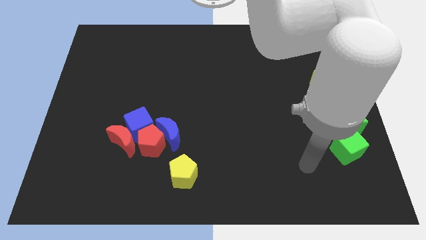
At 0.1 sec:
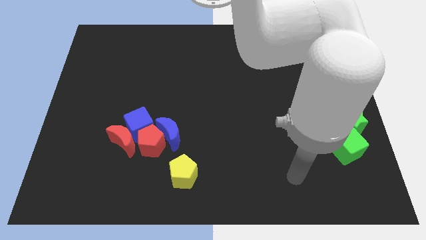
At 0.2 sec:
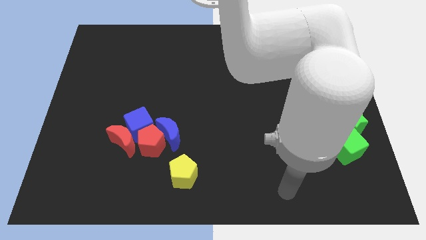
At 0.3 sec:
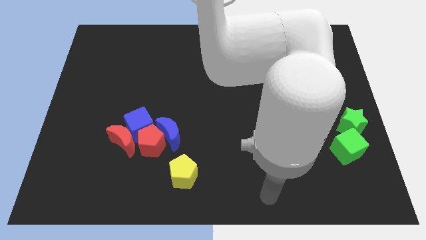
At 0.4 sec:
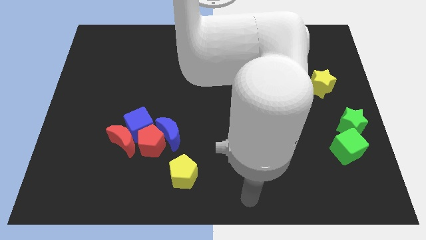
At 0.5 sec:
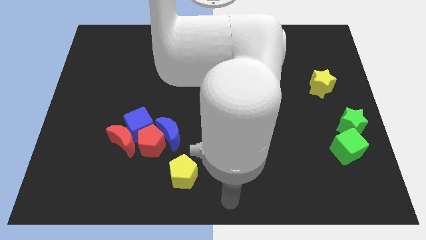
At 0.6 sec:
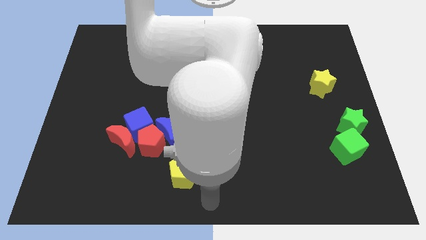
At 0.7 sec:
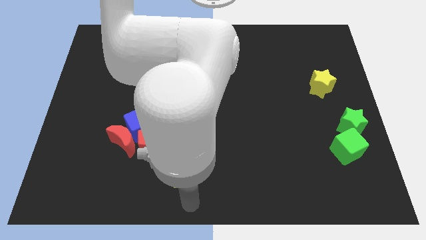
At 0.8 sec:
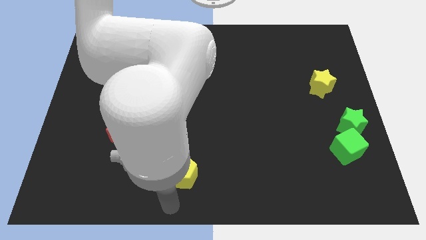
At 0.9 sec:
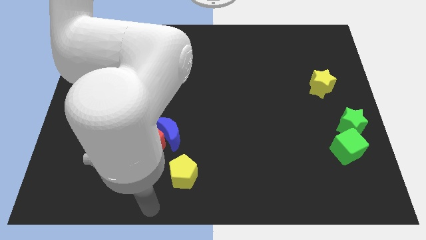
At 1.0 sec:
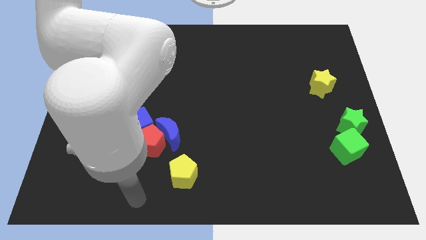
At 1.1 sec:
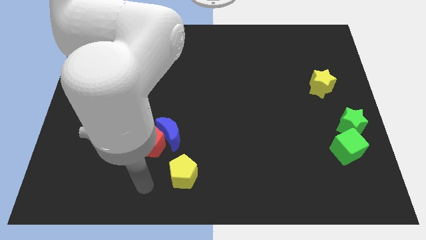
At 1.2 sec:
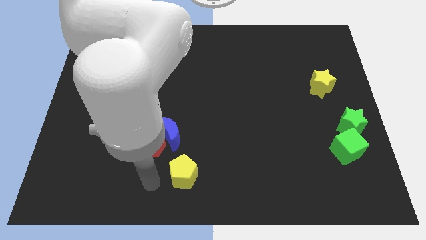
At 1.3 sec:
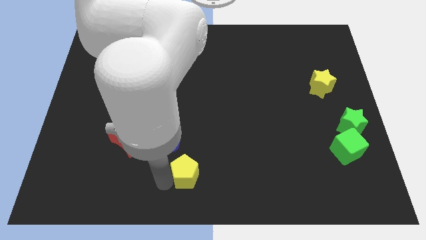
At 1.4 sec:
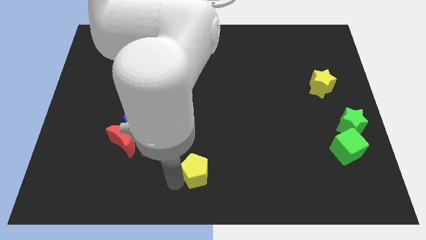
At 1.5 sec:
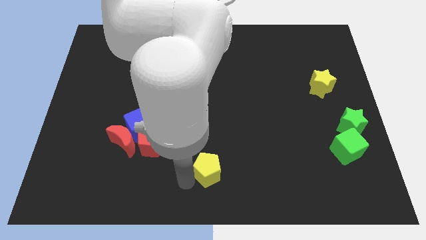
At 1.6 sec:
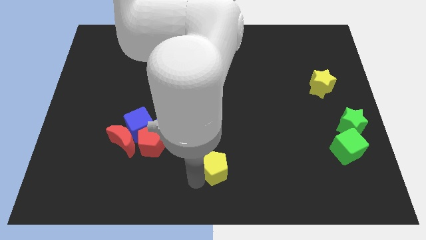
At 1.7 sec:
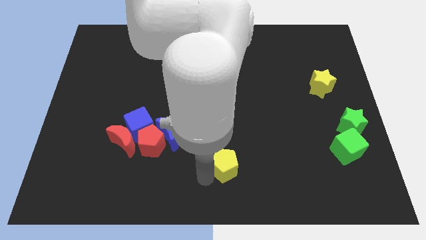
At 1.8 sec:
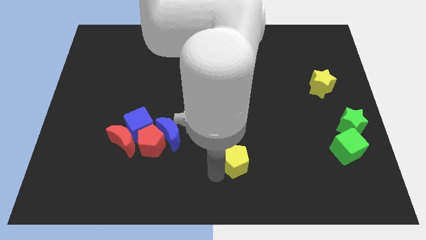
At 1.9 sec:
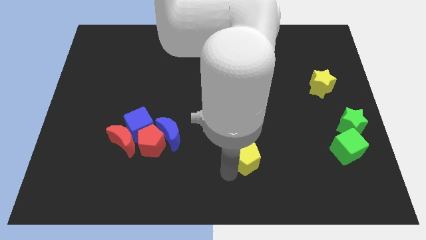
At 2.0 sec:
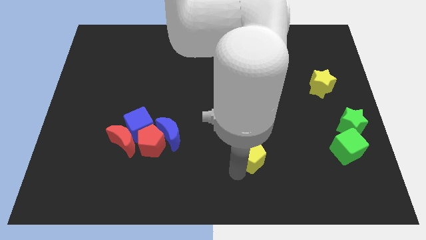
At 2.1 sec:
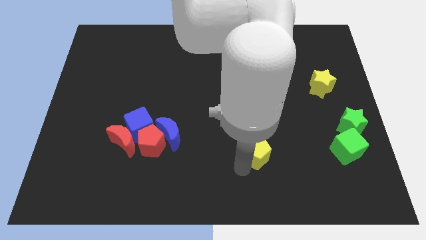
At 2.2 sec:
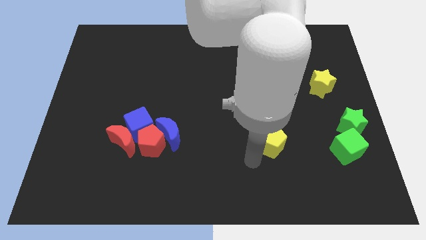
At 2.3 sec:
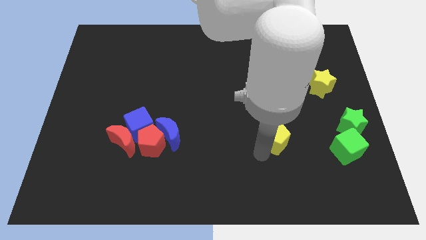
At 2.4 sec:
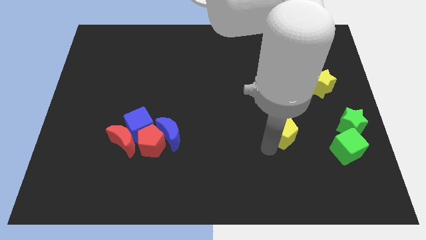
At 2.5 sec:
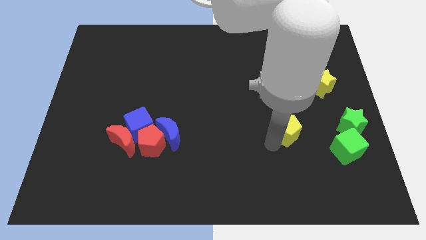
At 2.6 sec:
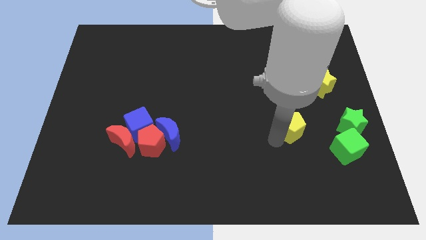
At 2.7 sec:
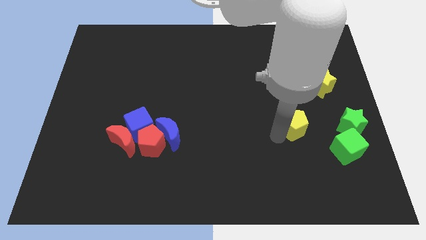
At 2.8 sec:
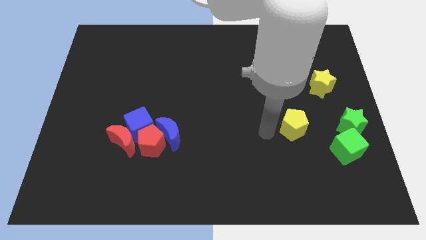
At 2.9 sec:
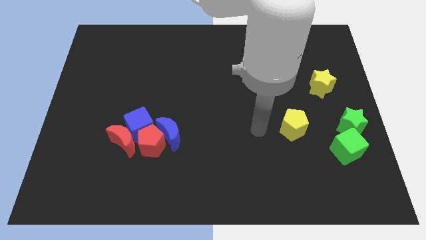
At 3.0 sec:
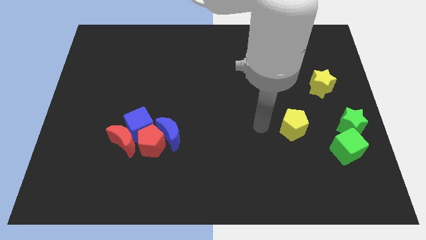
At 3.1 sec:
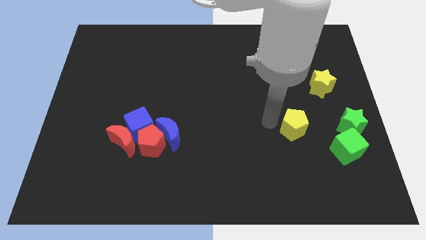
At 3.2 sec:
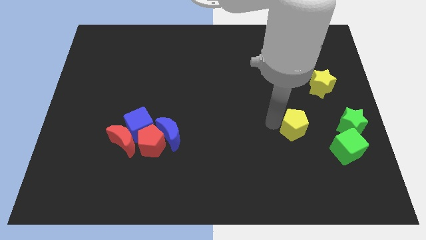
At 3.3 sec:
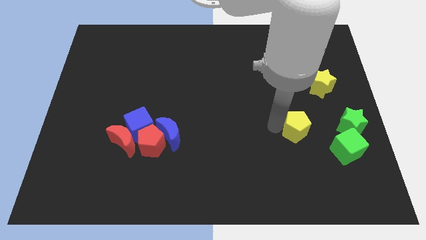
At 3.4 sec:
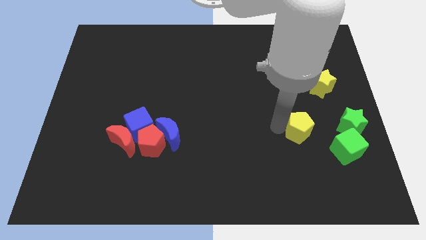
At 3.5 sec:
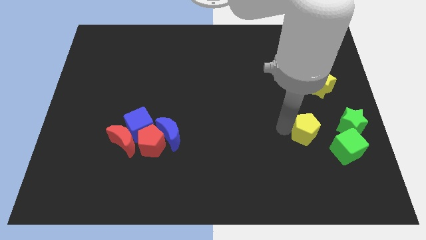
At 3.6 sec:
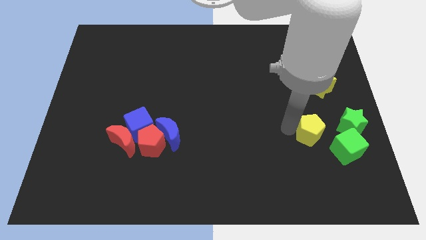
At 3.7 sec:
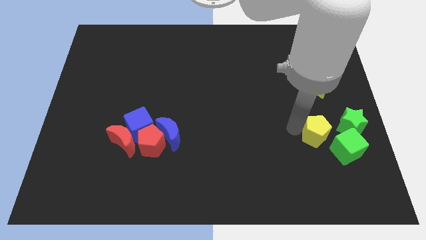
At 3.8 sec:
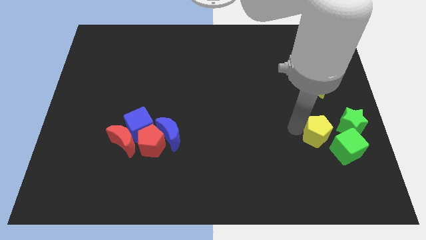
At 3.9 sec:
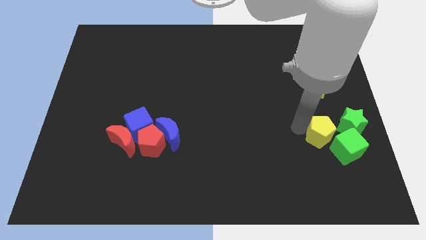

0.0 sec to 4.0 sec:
push the yellow pentagon to the left of the green star

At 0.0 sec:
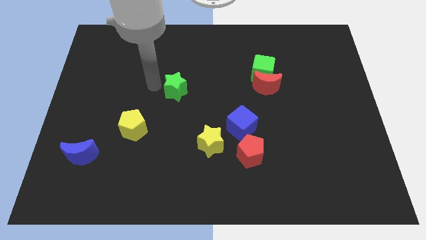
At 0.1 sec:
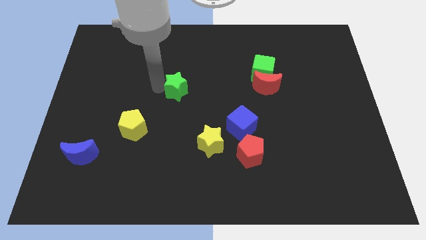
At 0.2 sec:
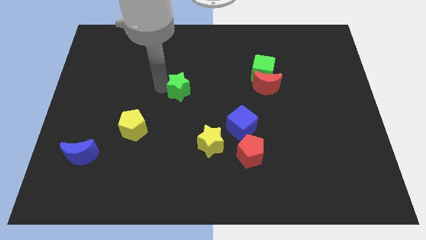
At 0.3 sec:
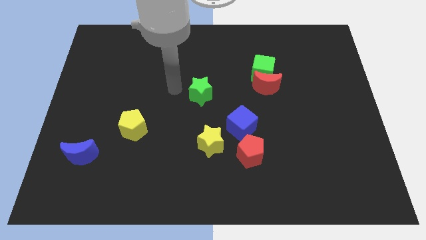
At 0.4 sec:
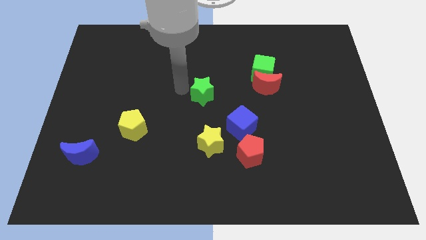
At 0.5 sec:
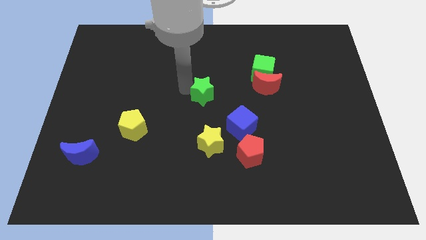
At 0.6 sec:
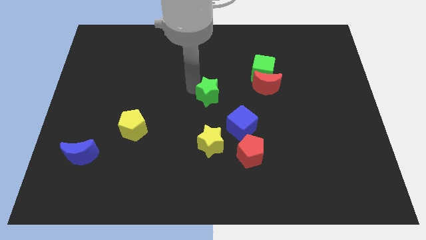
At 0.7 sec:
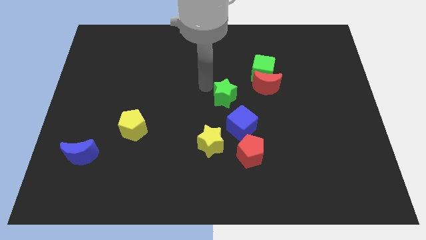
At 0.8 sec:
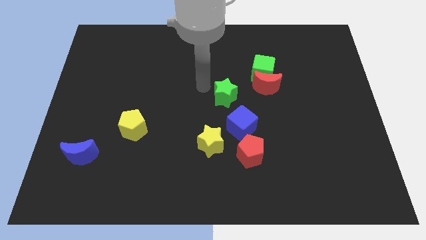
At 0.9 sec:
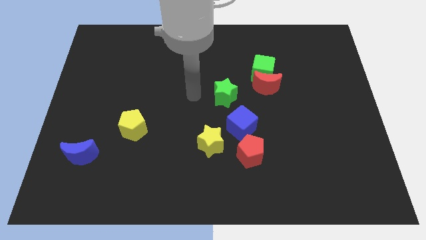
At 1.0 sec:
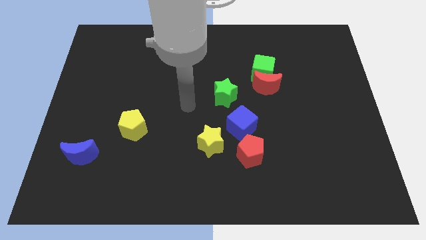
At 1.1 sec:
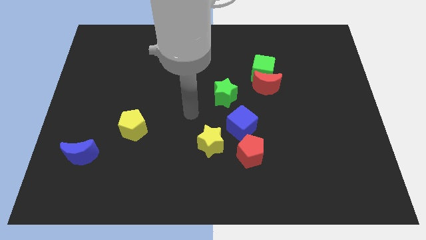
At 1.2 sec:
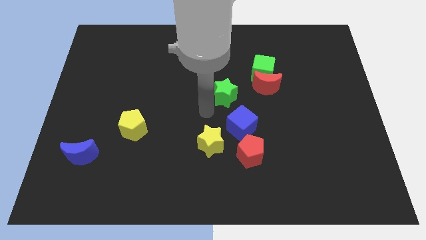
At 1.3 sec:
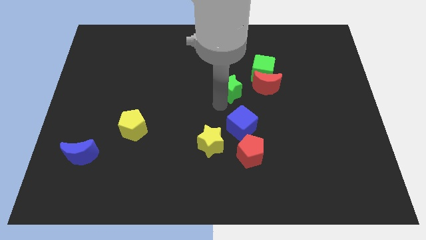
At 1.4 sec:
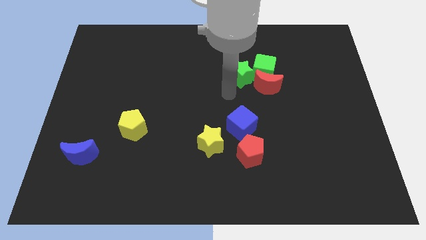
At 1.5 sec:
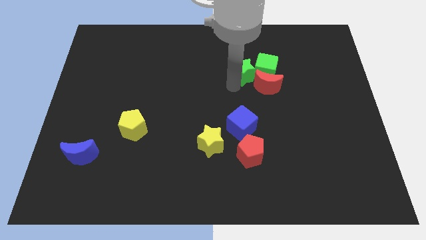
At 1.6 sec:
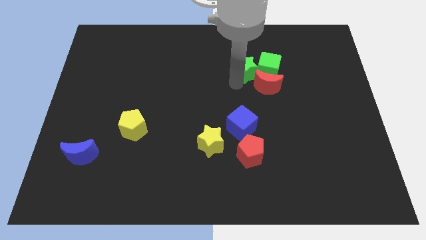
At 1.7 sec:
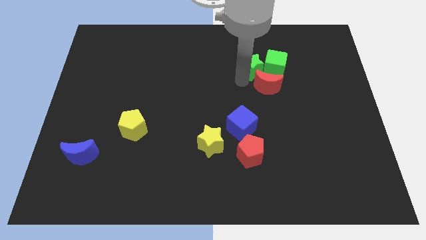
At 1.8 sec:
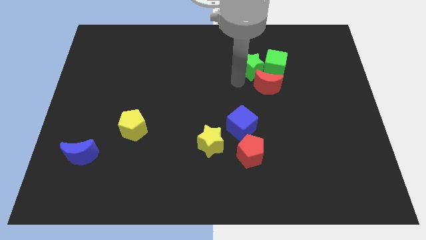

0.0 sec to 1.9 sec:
place the green star left side of green cube

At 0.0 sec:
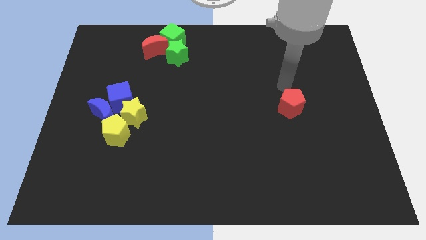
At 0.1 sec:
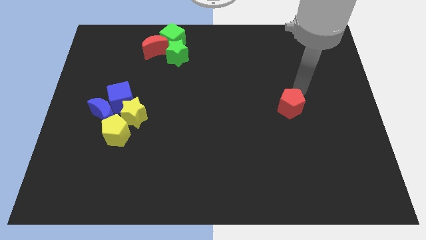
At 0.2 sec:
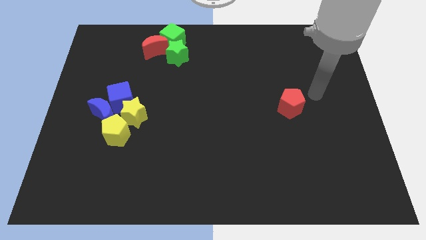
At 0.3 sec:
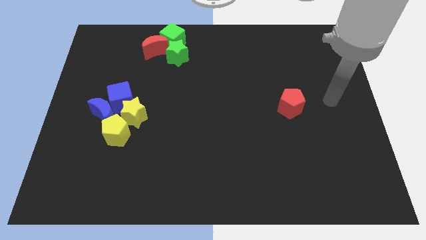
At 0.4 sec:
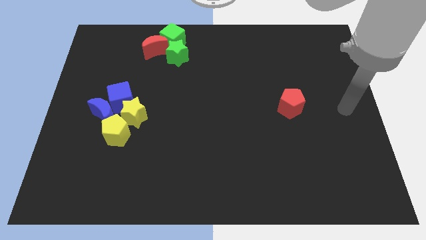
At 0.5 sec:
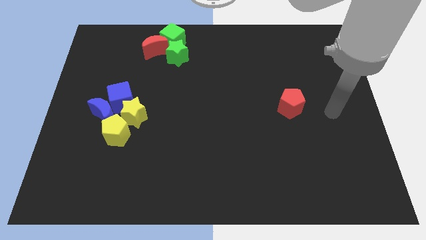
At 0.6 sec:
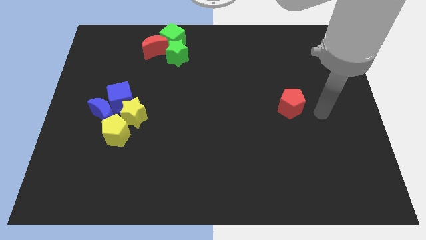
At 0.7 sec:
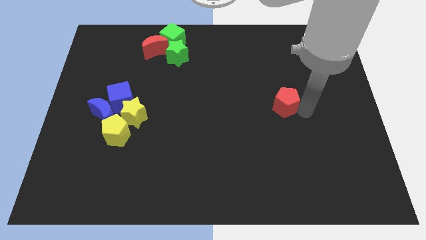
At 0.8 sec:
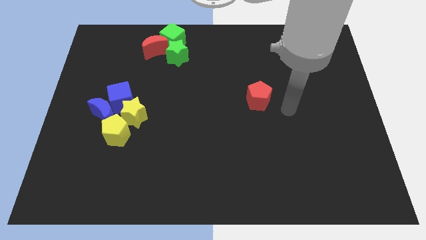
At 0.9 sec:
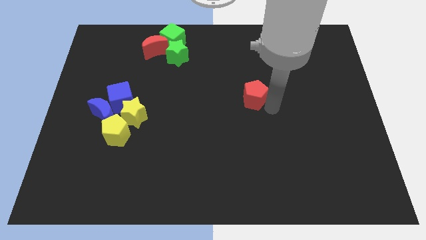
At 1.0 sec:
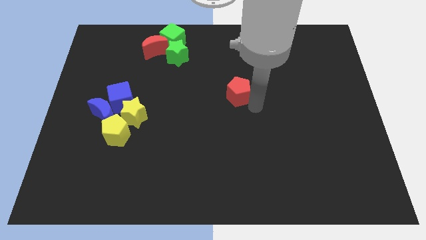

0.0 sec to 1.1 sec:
slide the red pentagon to the center

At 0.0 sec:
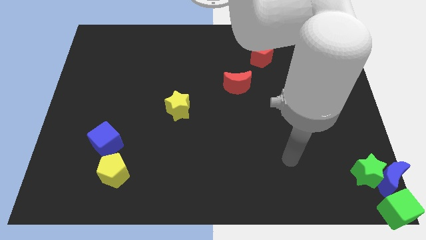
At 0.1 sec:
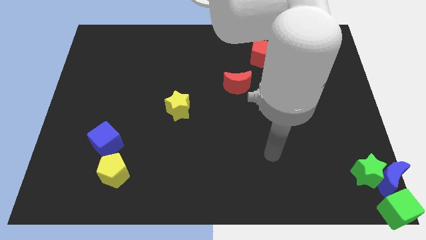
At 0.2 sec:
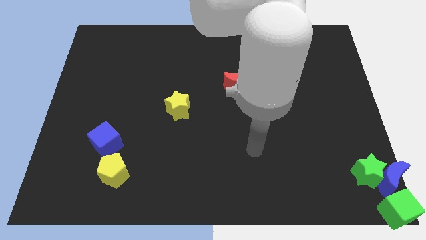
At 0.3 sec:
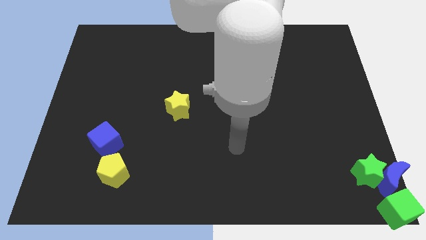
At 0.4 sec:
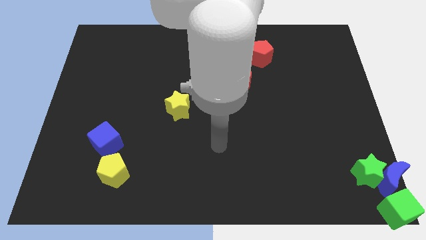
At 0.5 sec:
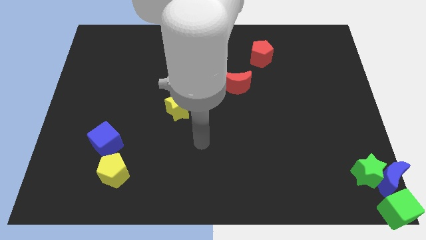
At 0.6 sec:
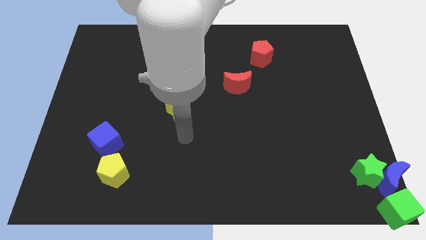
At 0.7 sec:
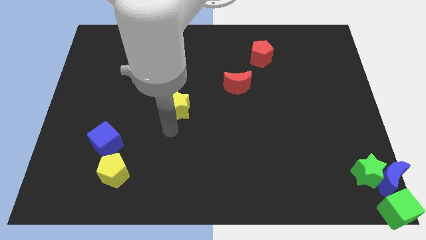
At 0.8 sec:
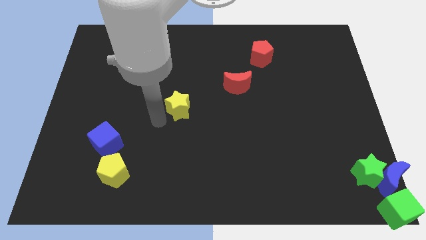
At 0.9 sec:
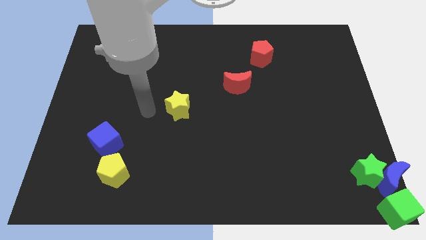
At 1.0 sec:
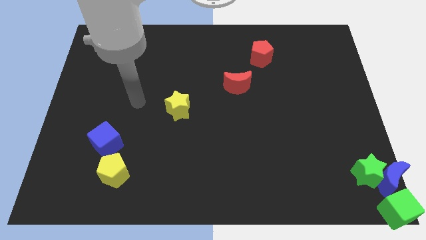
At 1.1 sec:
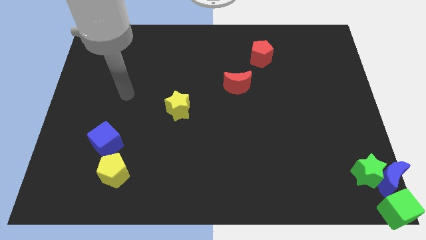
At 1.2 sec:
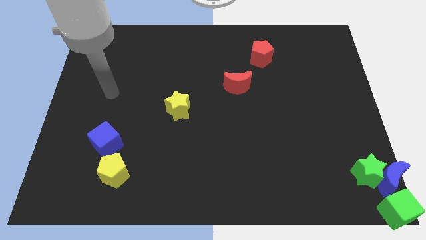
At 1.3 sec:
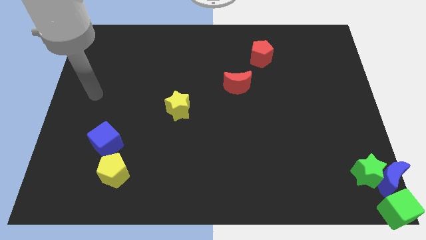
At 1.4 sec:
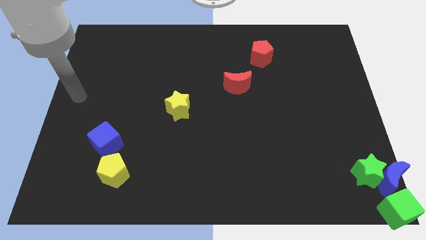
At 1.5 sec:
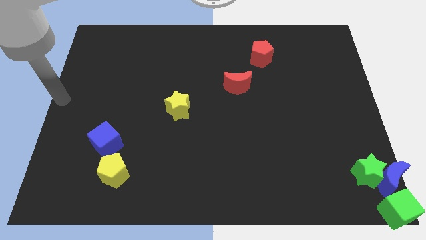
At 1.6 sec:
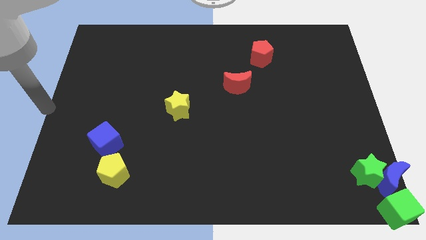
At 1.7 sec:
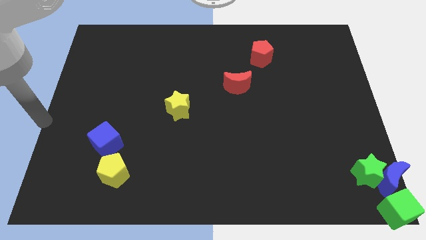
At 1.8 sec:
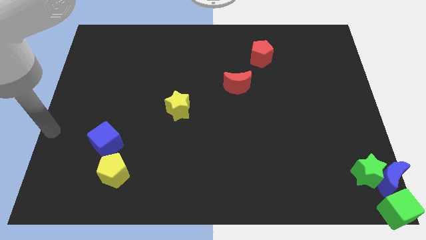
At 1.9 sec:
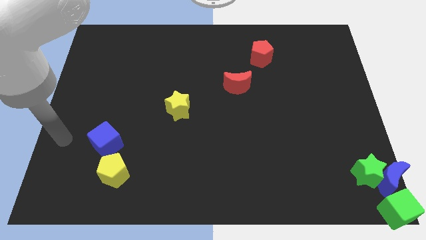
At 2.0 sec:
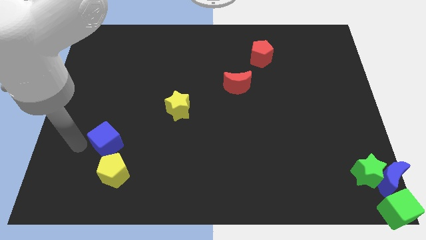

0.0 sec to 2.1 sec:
point your arm at the left of the blue cube
